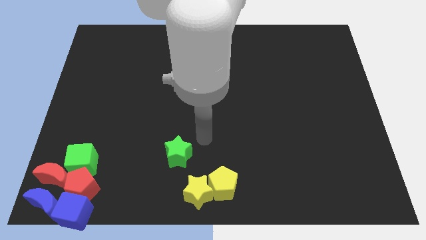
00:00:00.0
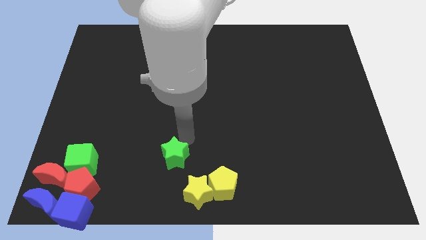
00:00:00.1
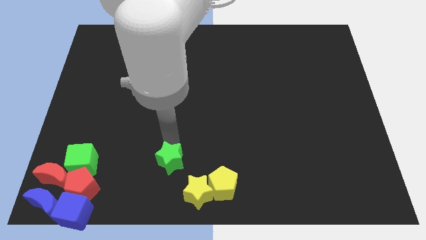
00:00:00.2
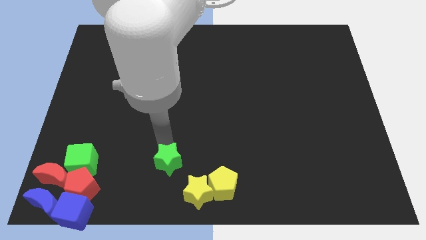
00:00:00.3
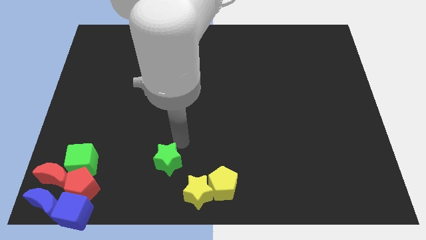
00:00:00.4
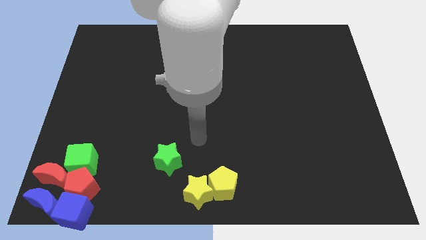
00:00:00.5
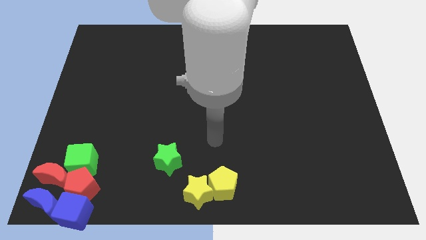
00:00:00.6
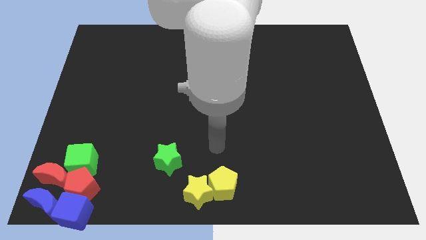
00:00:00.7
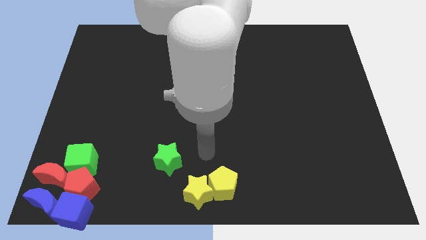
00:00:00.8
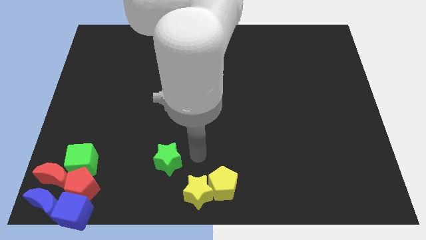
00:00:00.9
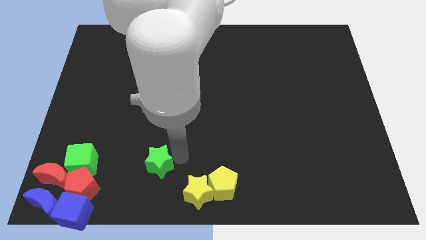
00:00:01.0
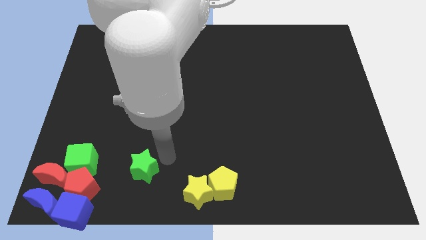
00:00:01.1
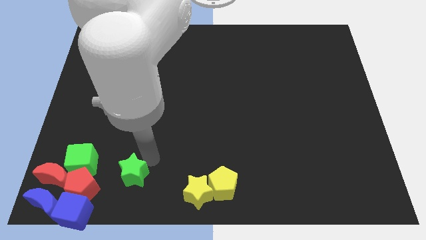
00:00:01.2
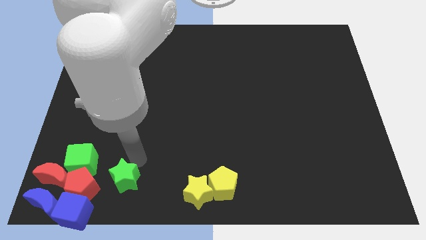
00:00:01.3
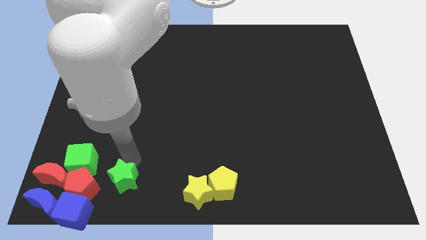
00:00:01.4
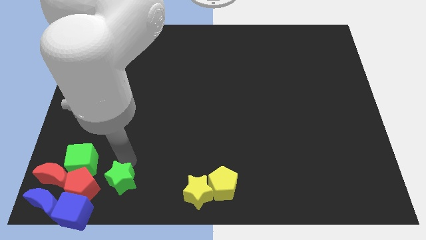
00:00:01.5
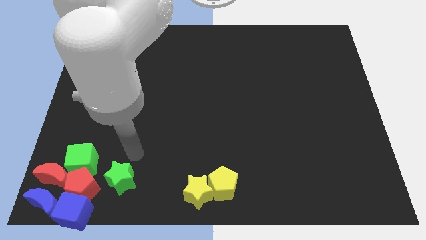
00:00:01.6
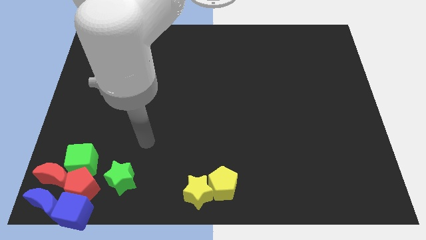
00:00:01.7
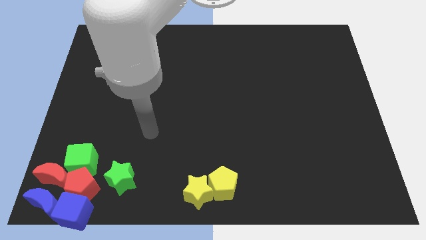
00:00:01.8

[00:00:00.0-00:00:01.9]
place the green star right to the red pentagon

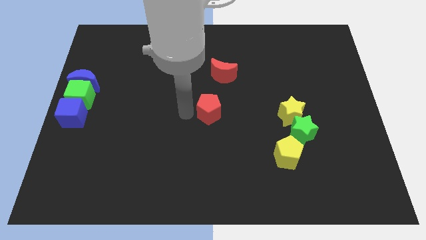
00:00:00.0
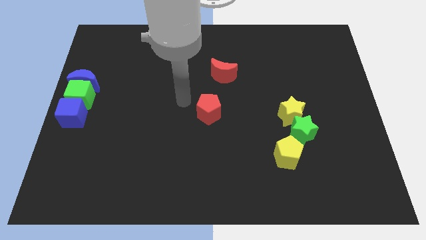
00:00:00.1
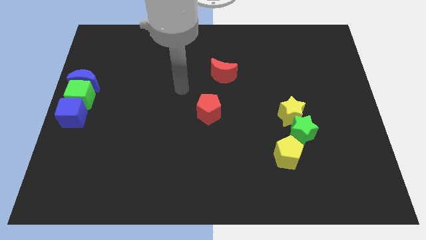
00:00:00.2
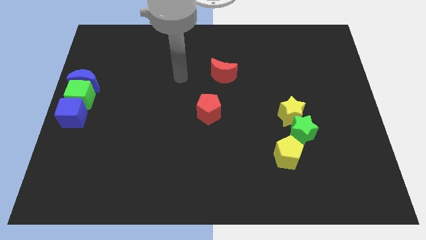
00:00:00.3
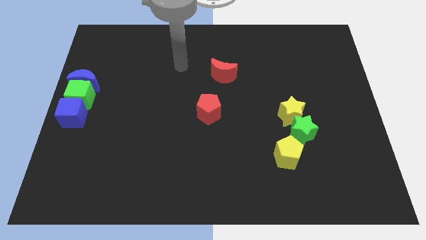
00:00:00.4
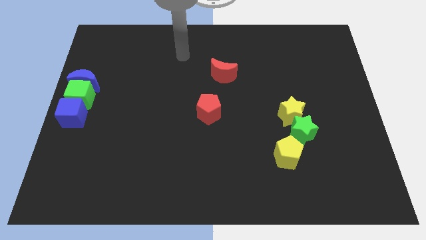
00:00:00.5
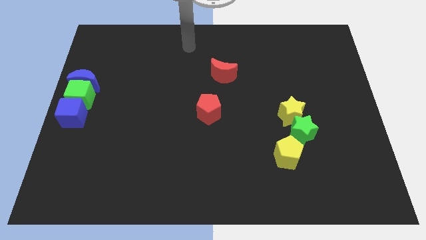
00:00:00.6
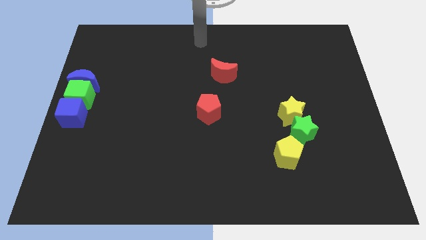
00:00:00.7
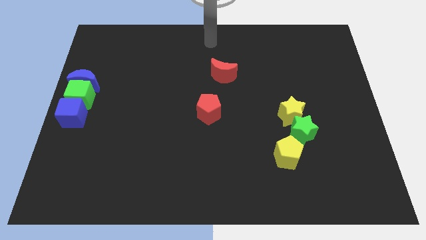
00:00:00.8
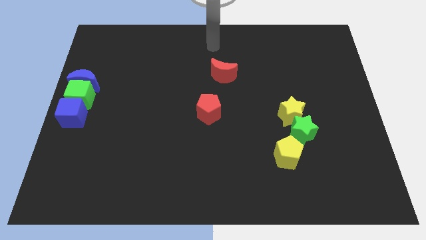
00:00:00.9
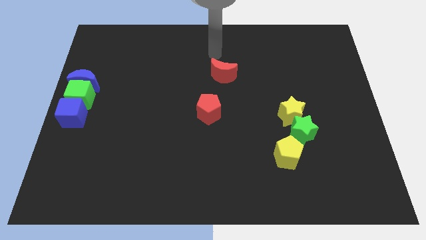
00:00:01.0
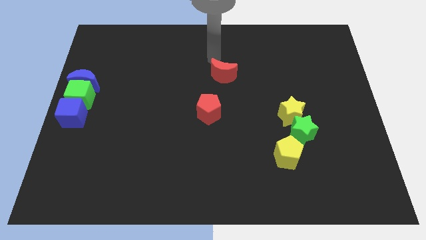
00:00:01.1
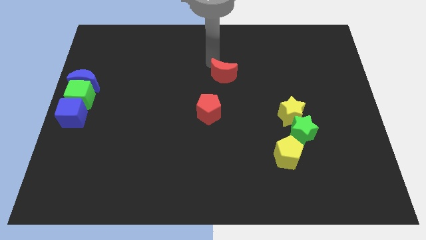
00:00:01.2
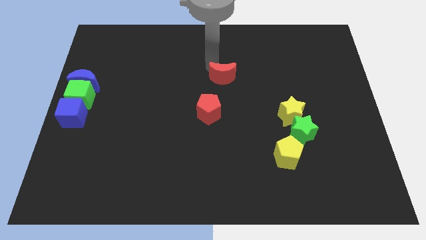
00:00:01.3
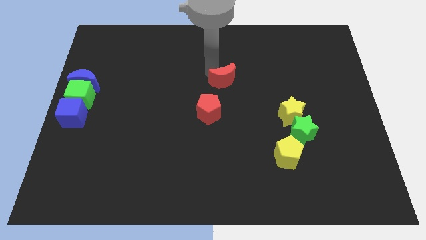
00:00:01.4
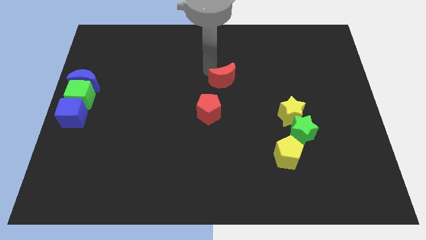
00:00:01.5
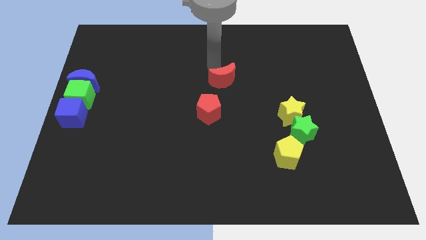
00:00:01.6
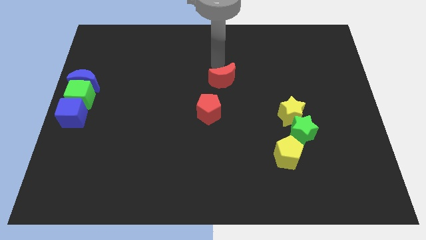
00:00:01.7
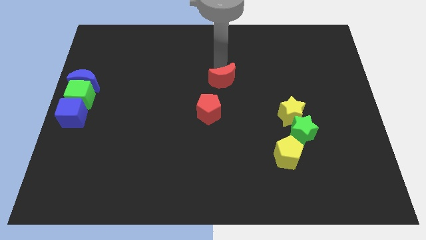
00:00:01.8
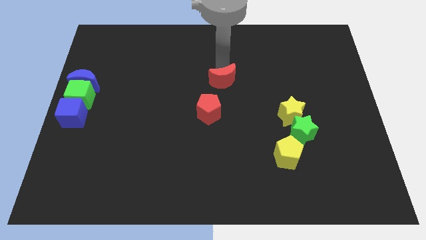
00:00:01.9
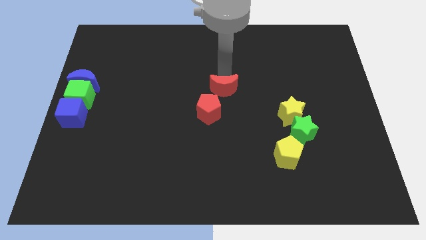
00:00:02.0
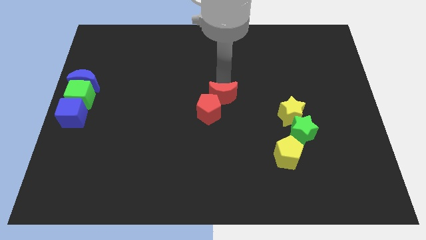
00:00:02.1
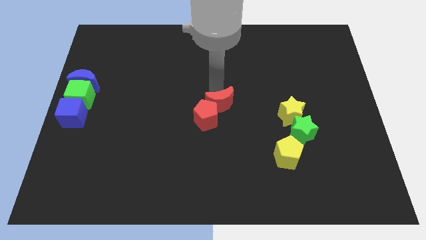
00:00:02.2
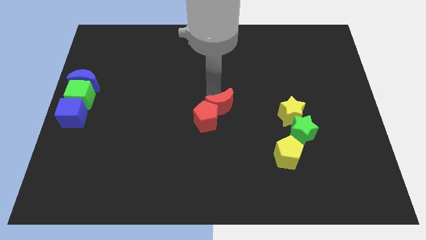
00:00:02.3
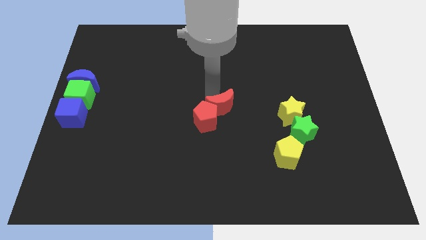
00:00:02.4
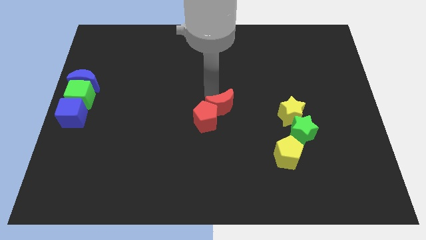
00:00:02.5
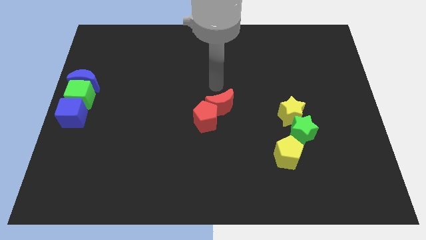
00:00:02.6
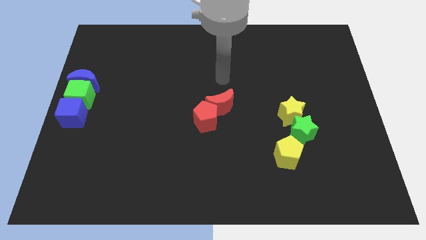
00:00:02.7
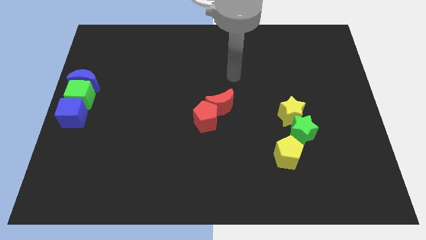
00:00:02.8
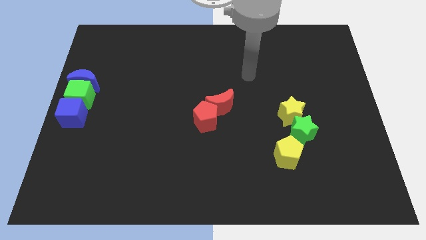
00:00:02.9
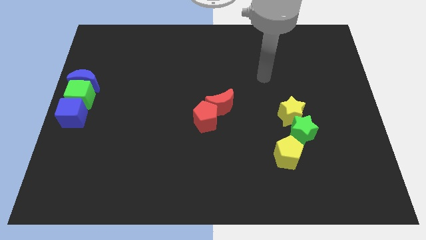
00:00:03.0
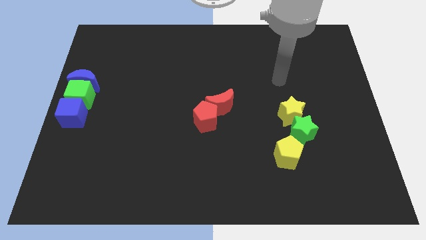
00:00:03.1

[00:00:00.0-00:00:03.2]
push red moon to the top of red pentagon

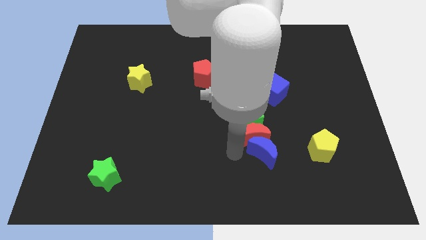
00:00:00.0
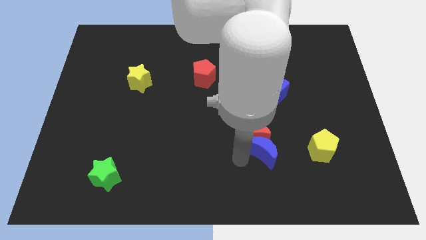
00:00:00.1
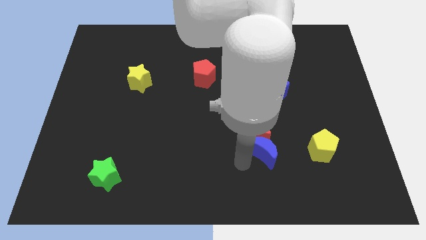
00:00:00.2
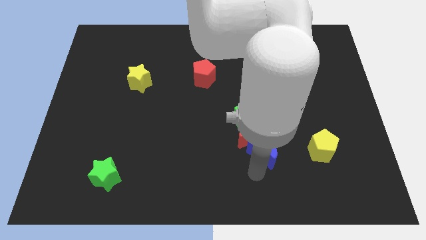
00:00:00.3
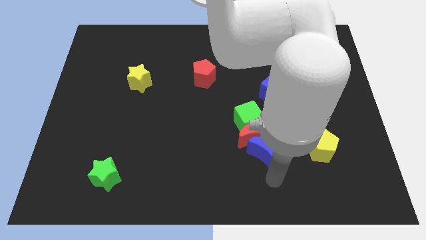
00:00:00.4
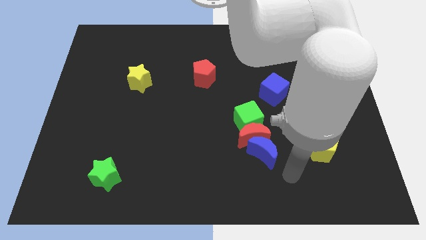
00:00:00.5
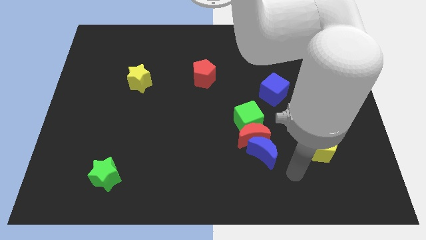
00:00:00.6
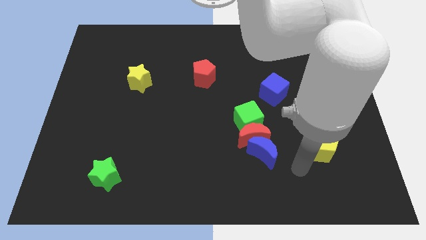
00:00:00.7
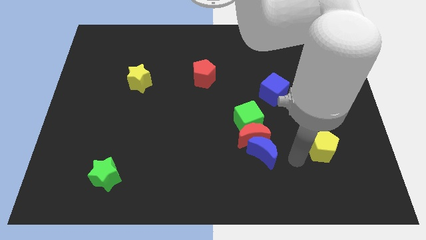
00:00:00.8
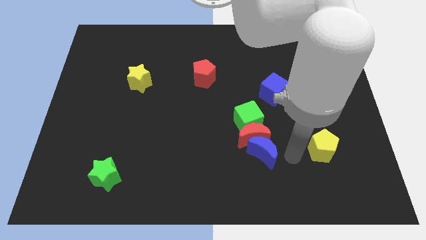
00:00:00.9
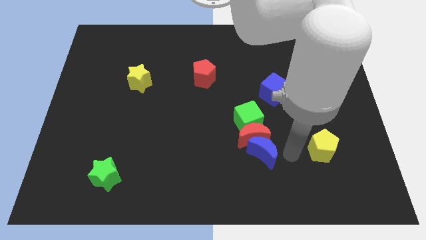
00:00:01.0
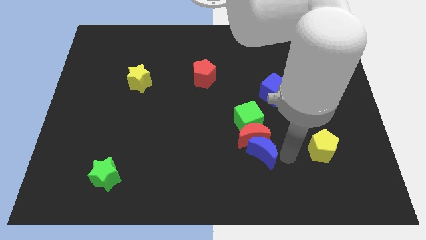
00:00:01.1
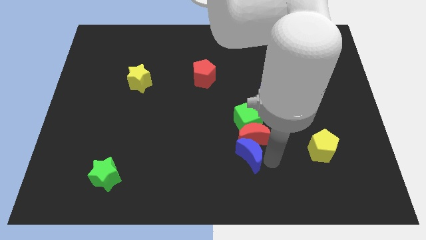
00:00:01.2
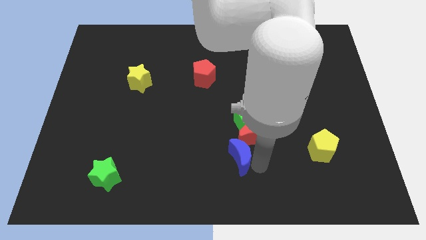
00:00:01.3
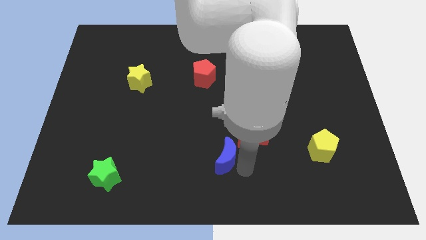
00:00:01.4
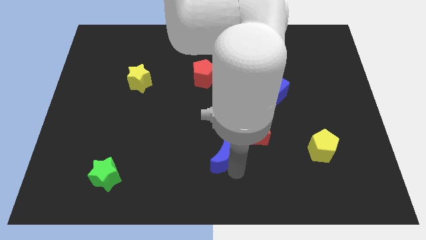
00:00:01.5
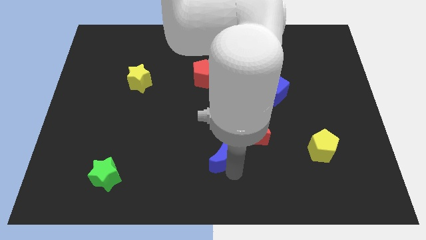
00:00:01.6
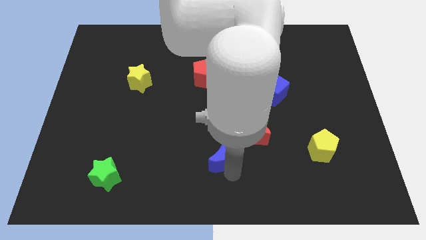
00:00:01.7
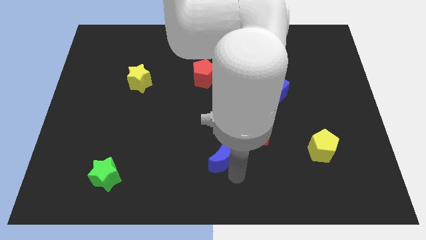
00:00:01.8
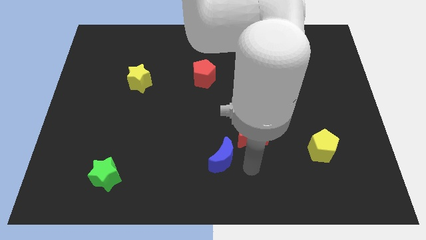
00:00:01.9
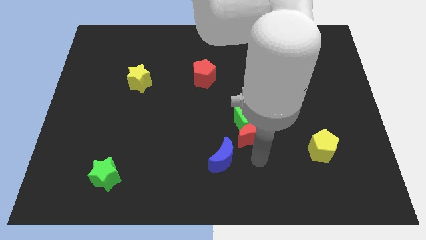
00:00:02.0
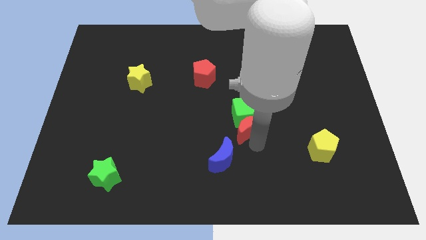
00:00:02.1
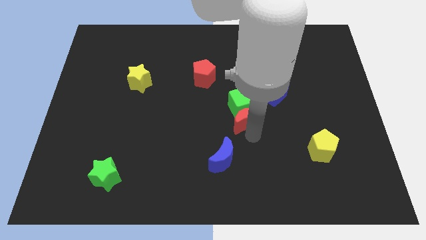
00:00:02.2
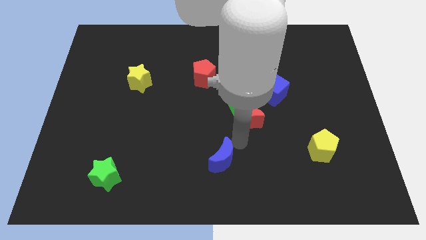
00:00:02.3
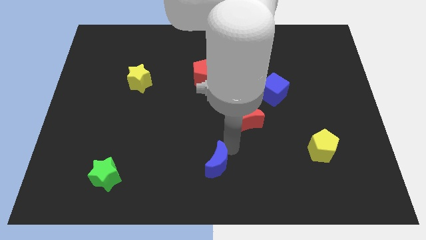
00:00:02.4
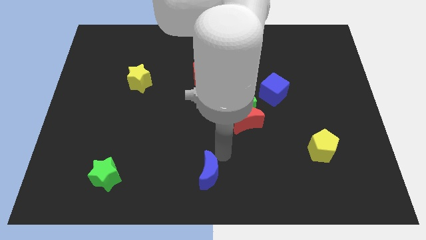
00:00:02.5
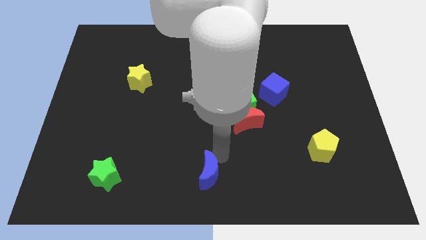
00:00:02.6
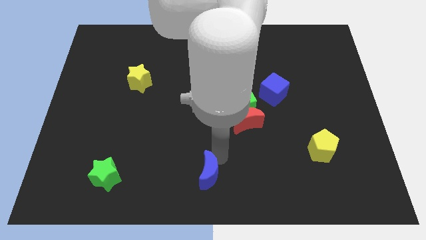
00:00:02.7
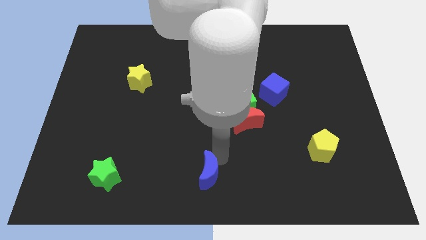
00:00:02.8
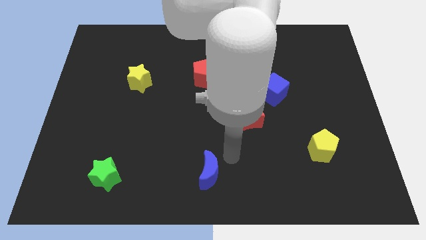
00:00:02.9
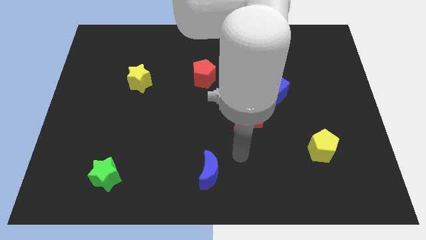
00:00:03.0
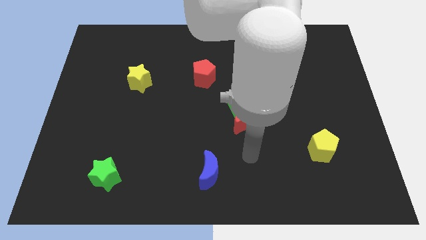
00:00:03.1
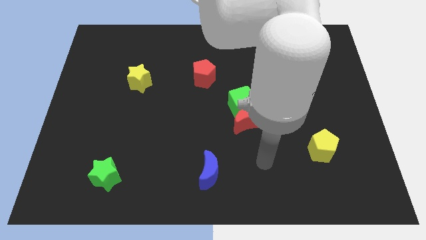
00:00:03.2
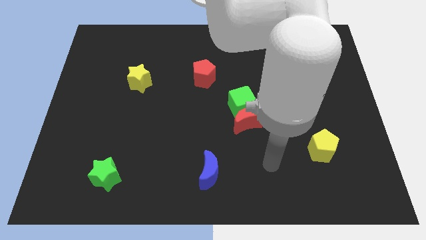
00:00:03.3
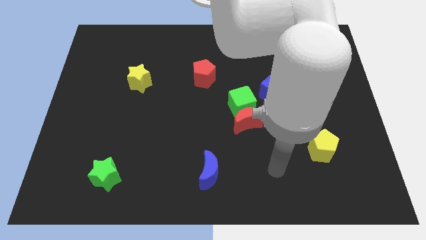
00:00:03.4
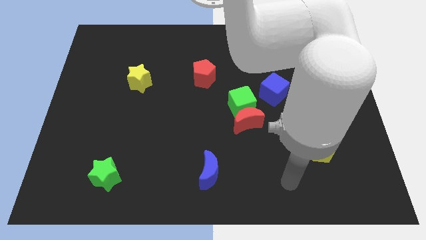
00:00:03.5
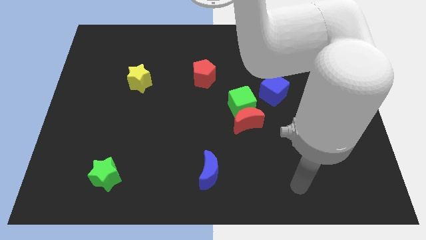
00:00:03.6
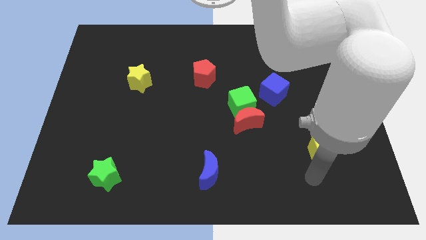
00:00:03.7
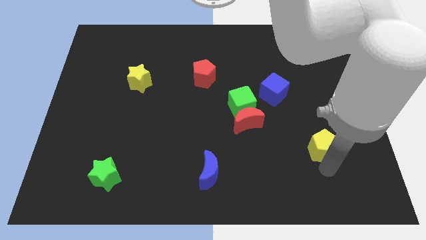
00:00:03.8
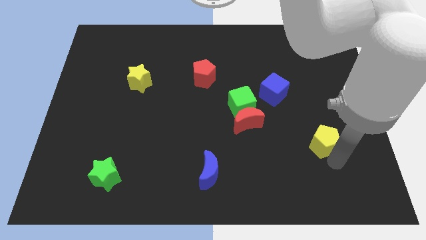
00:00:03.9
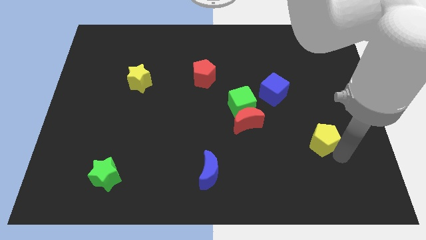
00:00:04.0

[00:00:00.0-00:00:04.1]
place the blue moon in between the green star and yellow pentagon
